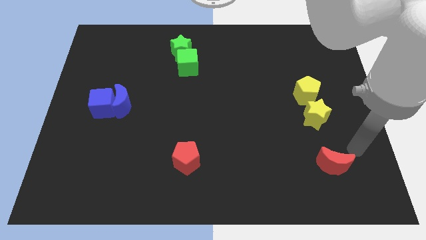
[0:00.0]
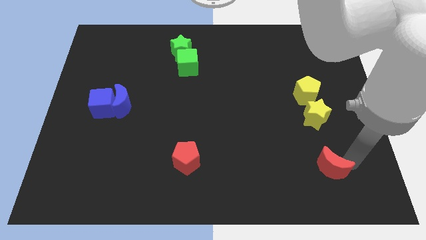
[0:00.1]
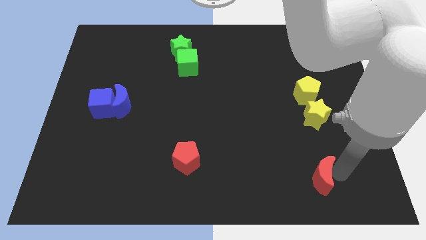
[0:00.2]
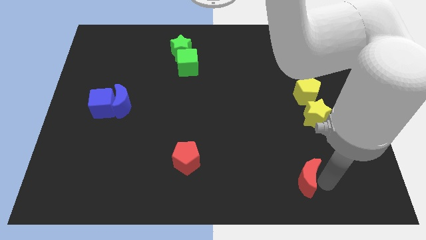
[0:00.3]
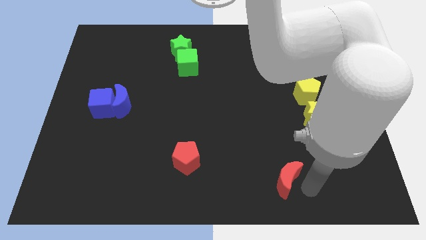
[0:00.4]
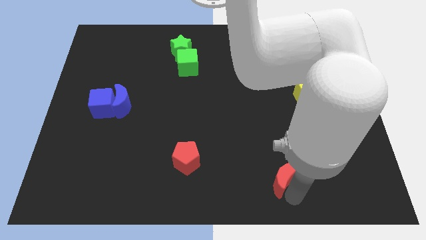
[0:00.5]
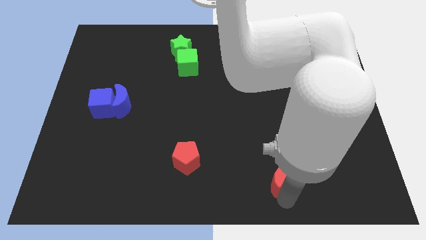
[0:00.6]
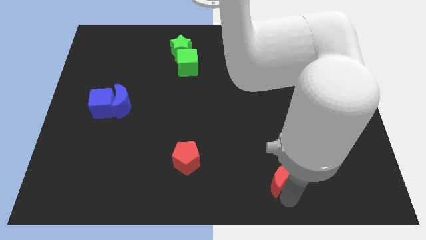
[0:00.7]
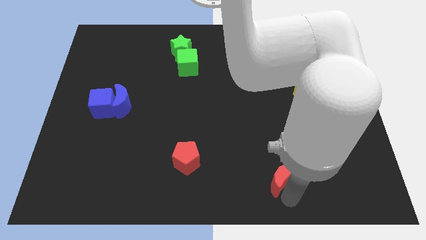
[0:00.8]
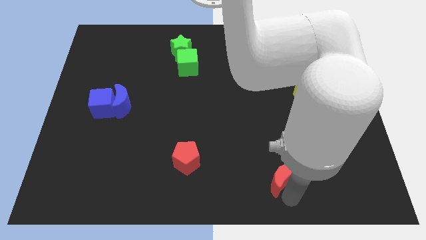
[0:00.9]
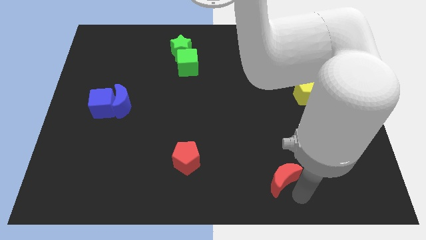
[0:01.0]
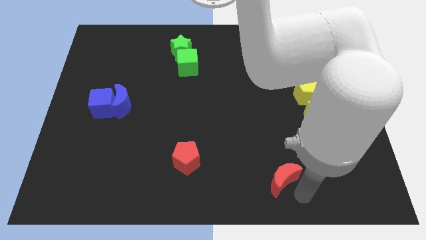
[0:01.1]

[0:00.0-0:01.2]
push red moon towards bottom center

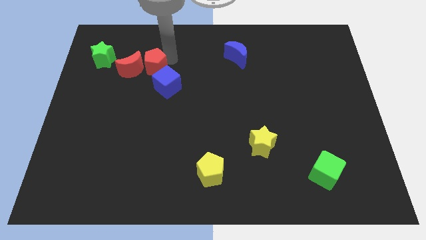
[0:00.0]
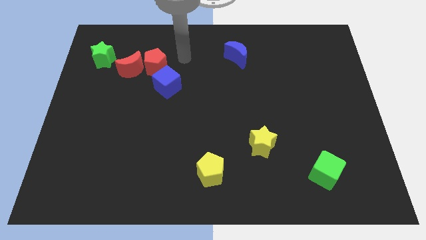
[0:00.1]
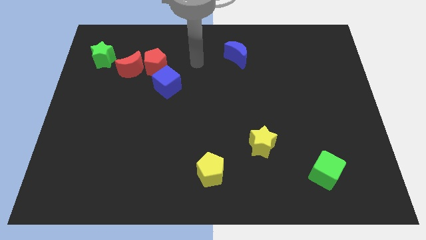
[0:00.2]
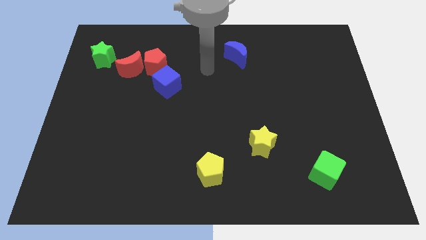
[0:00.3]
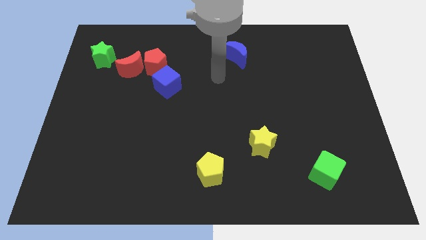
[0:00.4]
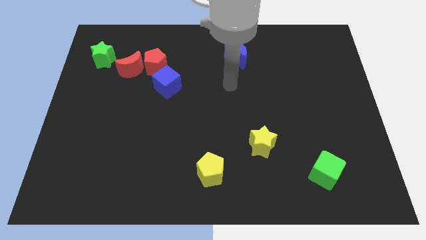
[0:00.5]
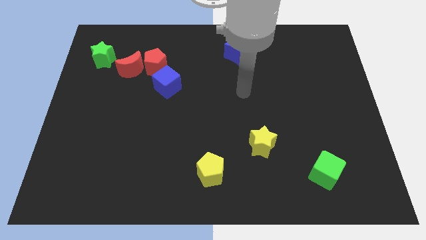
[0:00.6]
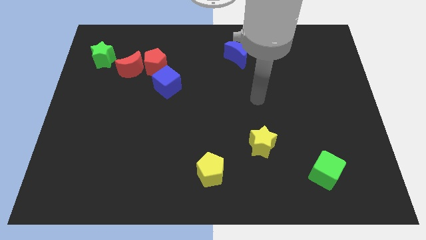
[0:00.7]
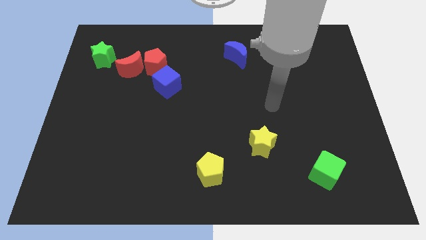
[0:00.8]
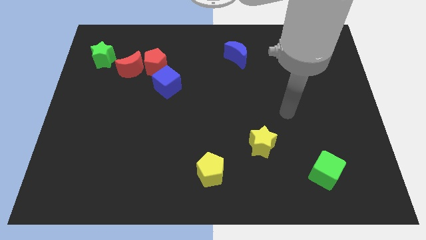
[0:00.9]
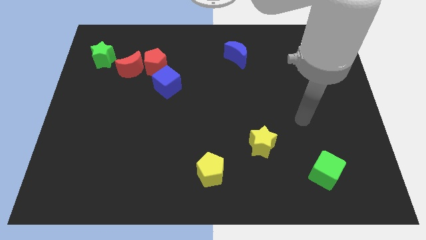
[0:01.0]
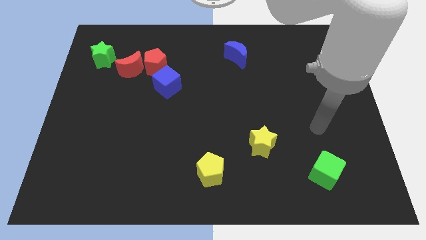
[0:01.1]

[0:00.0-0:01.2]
point your hand above the green cube

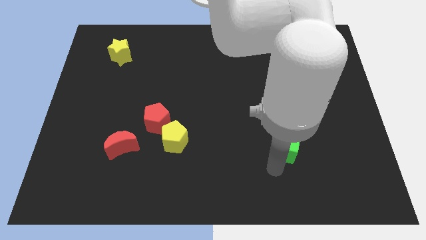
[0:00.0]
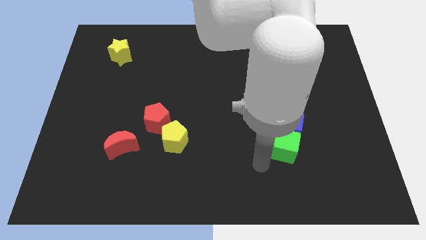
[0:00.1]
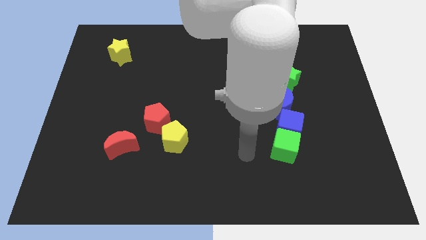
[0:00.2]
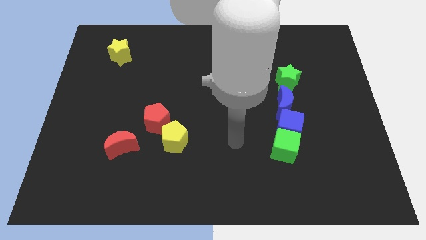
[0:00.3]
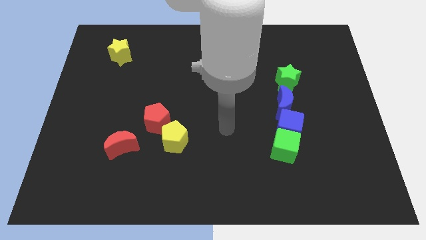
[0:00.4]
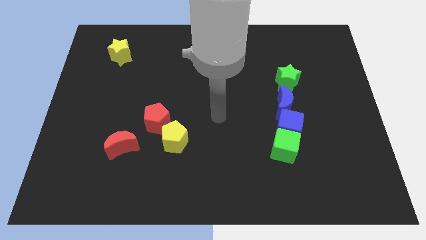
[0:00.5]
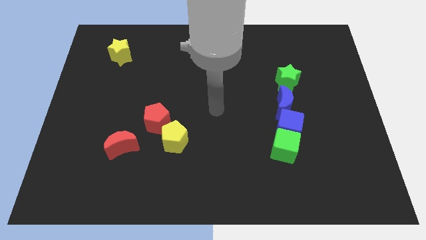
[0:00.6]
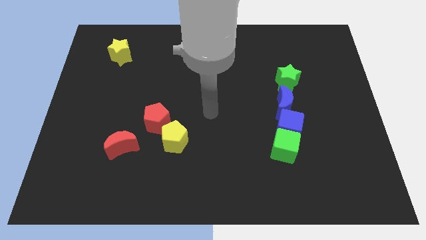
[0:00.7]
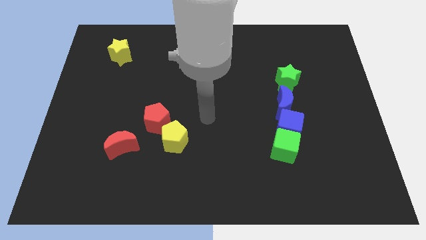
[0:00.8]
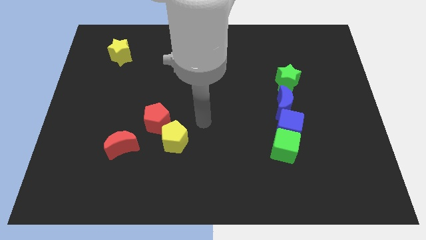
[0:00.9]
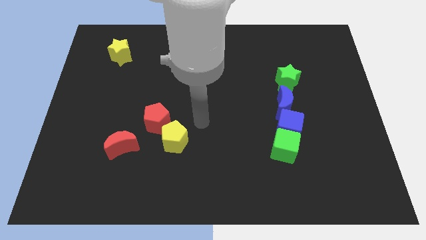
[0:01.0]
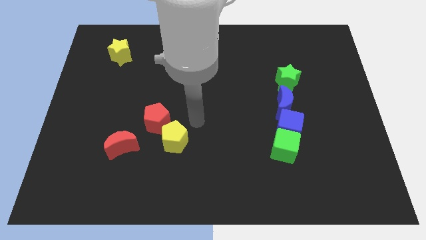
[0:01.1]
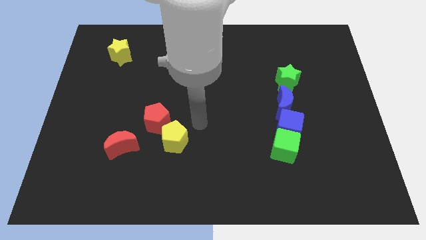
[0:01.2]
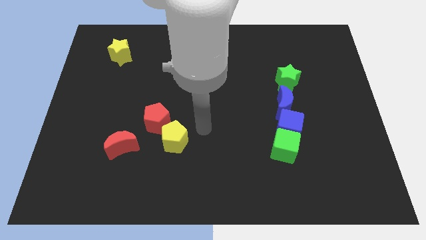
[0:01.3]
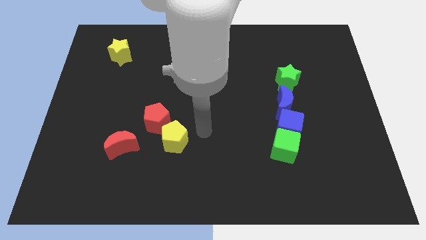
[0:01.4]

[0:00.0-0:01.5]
move the arm away from the green cube

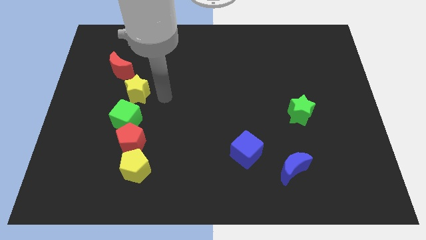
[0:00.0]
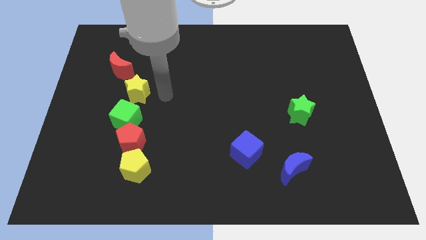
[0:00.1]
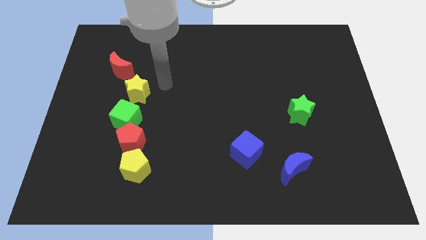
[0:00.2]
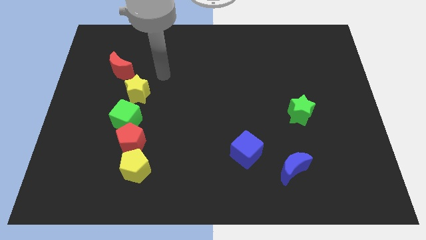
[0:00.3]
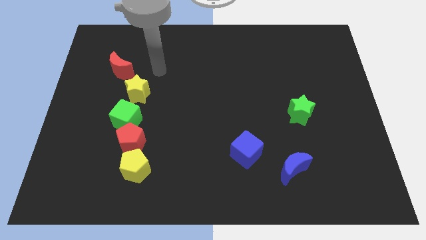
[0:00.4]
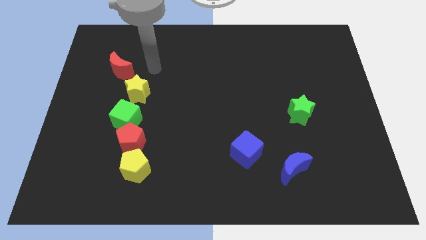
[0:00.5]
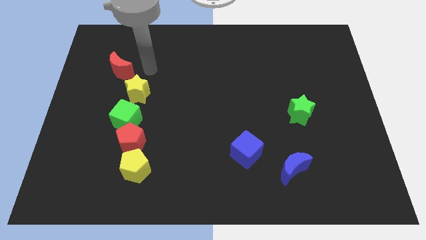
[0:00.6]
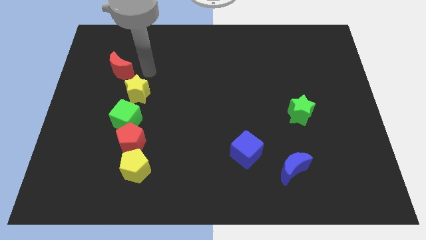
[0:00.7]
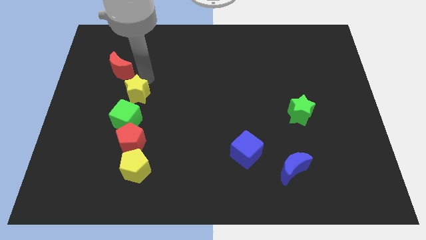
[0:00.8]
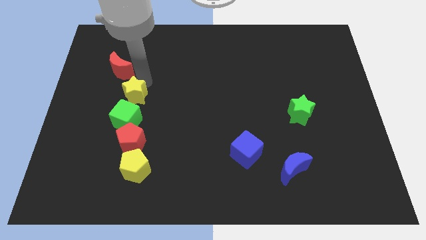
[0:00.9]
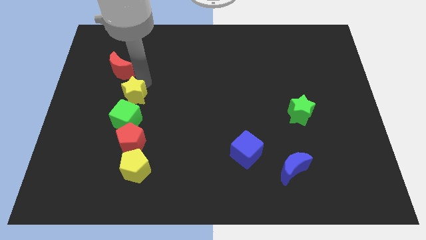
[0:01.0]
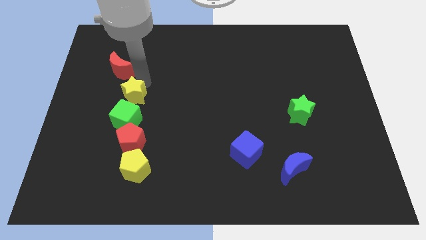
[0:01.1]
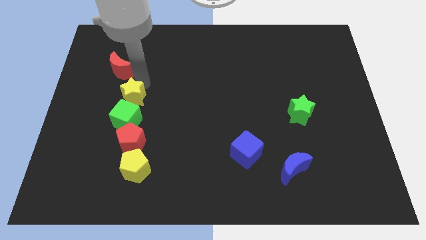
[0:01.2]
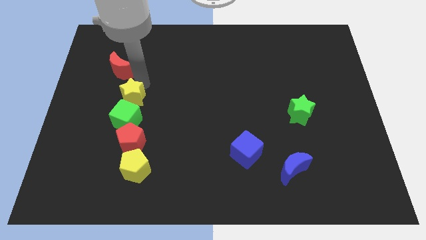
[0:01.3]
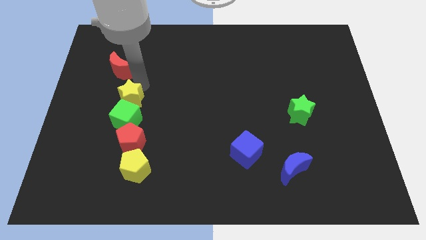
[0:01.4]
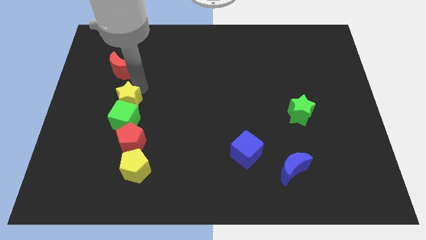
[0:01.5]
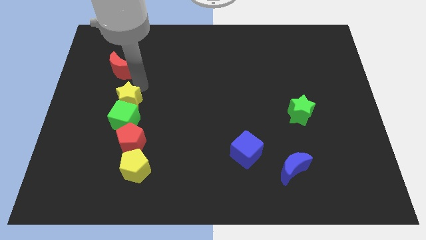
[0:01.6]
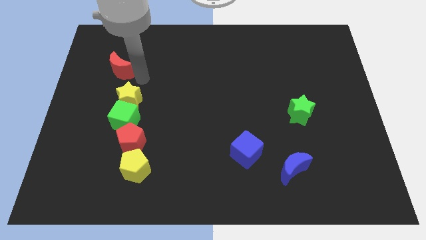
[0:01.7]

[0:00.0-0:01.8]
push the yellow star and green cube together

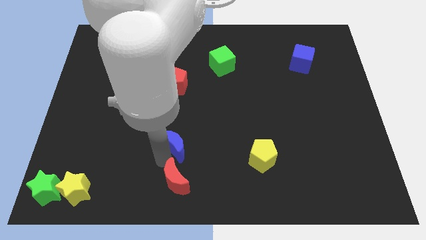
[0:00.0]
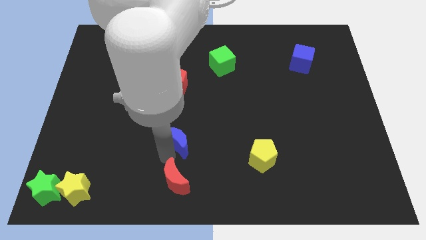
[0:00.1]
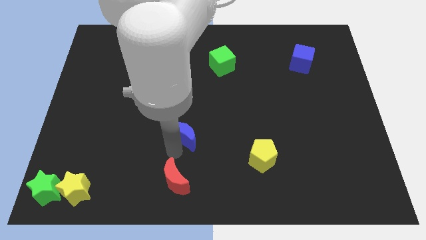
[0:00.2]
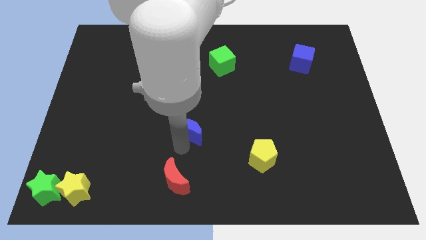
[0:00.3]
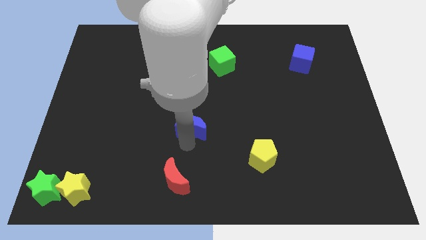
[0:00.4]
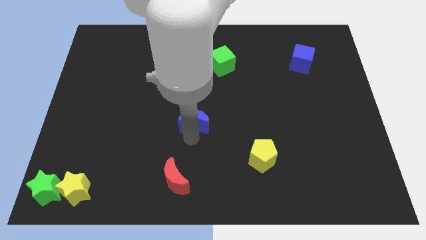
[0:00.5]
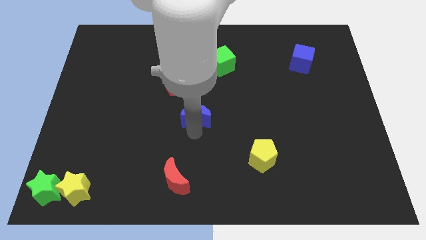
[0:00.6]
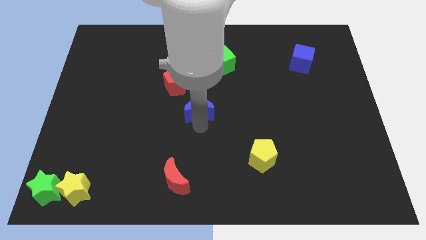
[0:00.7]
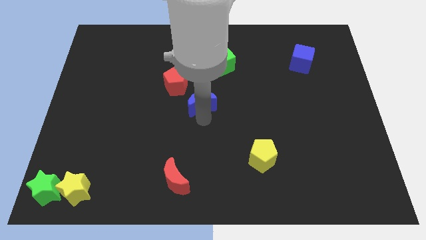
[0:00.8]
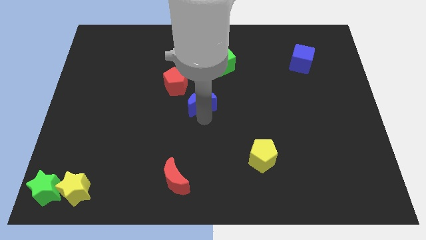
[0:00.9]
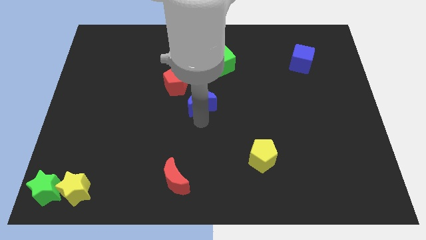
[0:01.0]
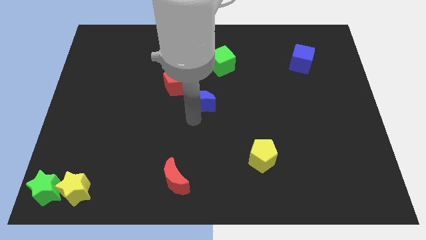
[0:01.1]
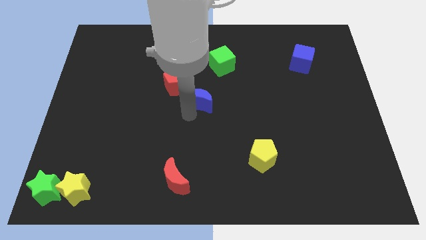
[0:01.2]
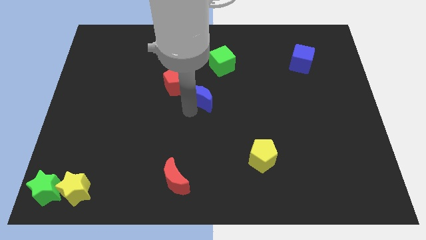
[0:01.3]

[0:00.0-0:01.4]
put the blue moon between the red pentagon and yellow pentagon

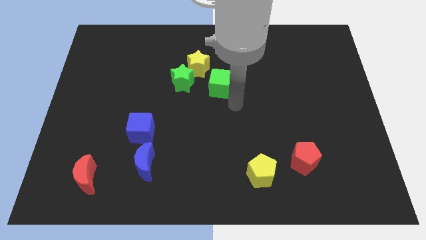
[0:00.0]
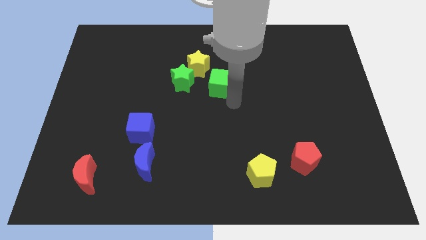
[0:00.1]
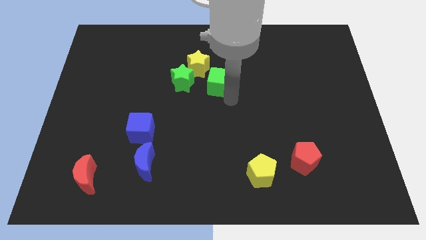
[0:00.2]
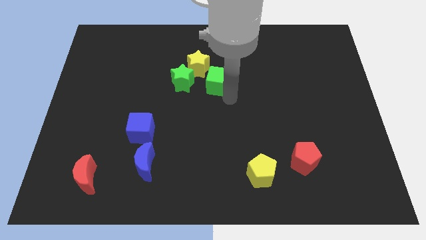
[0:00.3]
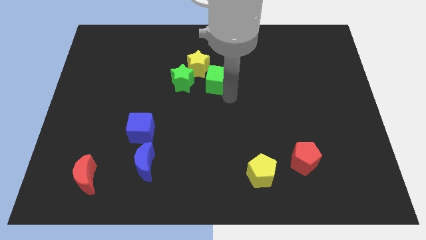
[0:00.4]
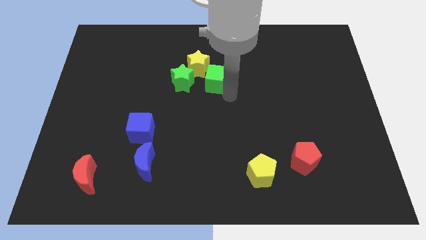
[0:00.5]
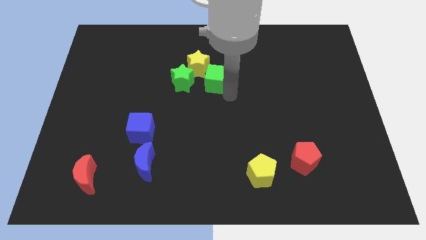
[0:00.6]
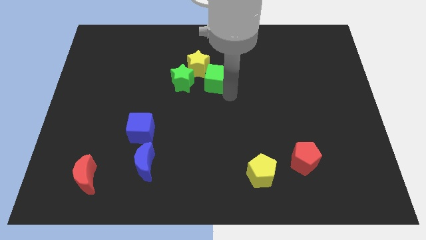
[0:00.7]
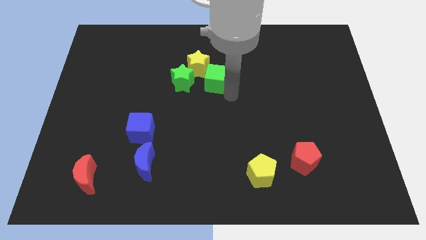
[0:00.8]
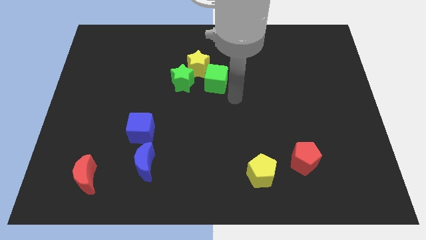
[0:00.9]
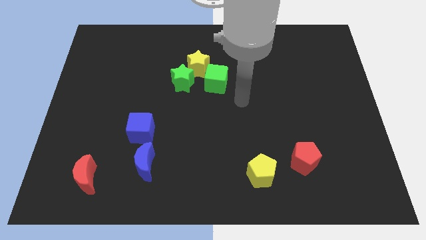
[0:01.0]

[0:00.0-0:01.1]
slide green cube towards yellow star

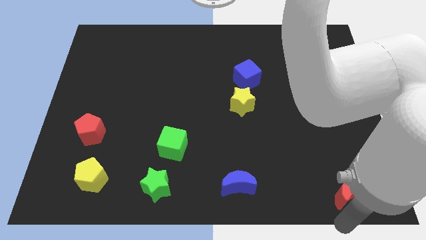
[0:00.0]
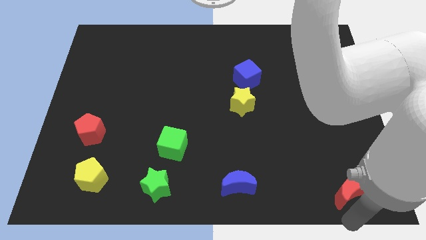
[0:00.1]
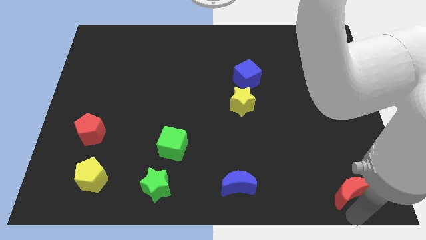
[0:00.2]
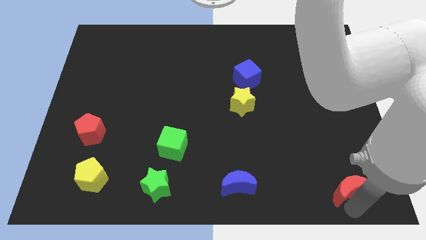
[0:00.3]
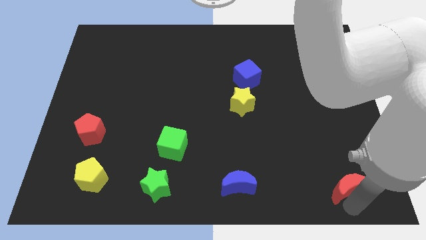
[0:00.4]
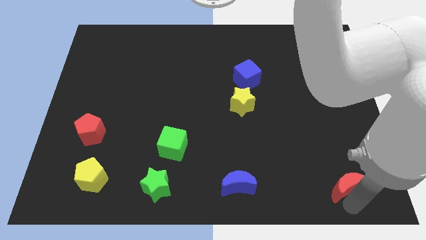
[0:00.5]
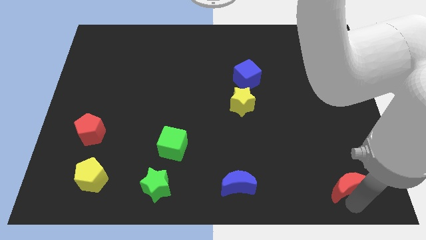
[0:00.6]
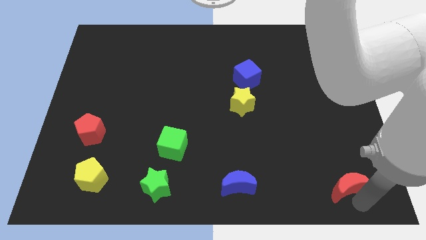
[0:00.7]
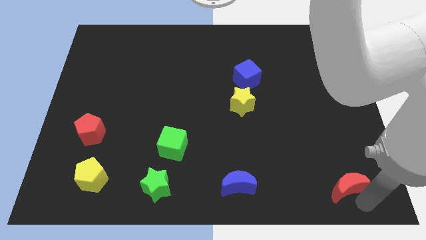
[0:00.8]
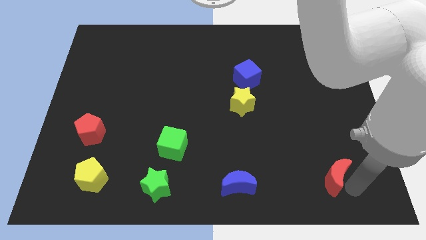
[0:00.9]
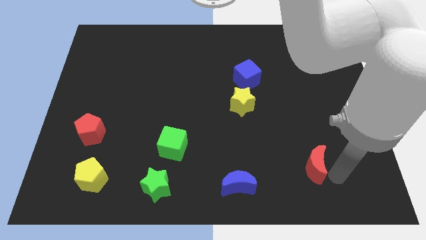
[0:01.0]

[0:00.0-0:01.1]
slightly move the red moon towards the center of the board
